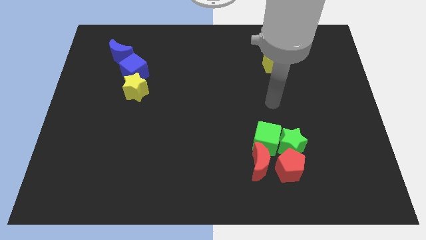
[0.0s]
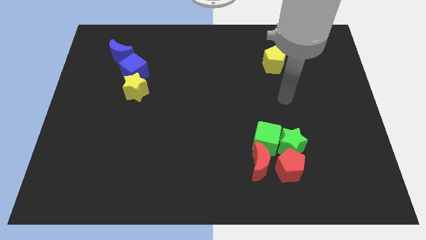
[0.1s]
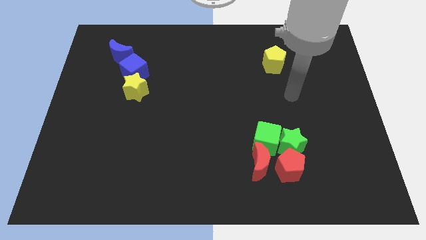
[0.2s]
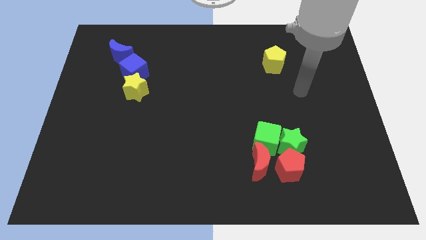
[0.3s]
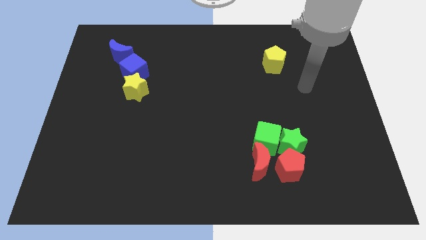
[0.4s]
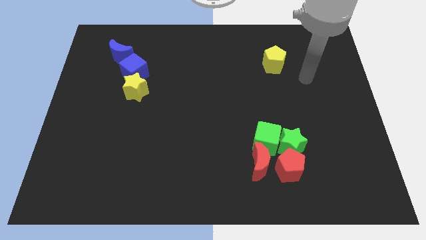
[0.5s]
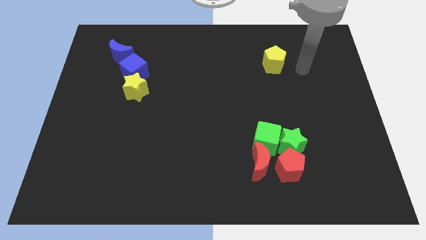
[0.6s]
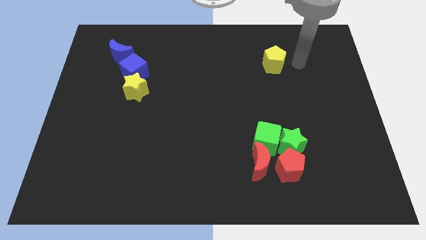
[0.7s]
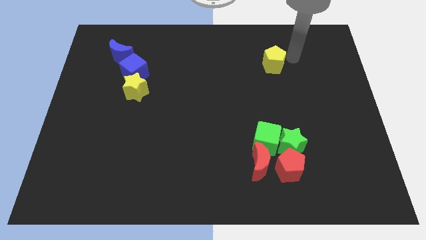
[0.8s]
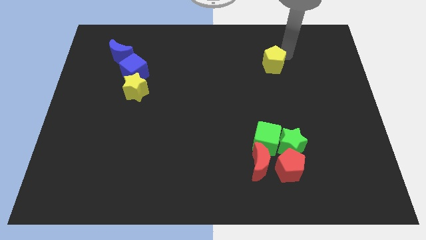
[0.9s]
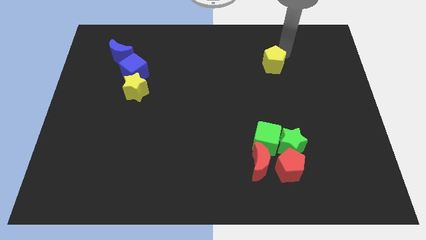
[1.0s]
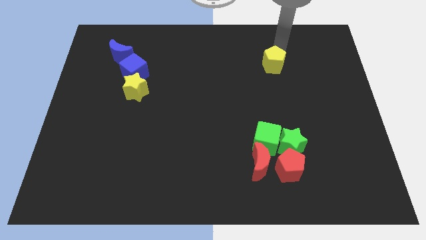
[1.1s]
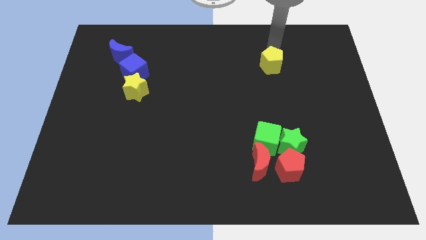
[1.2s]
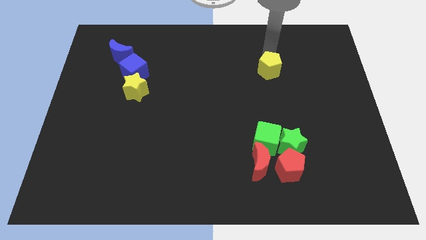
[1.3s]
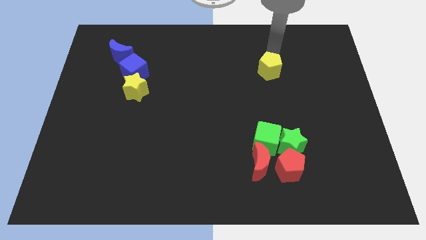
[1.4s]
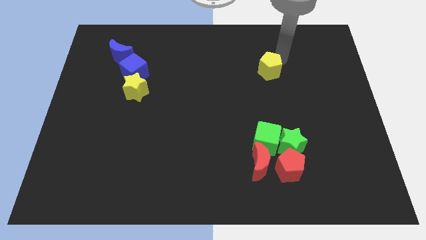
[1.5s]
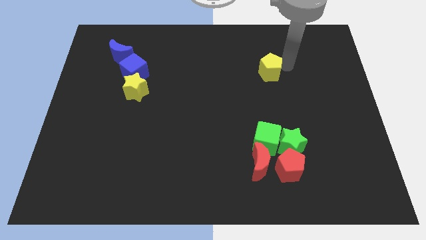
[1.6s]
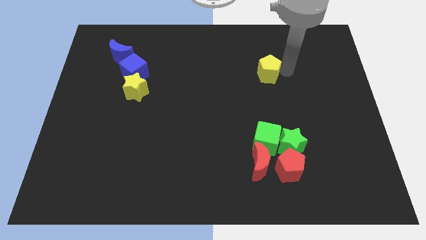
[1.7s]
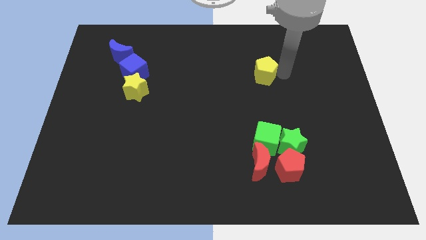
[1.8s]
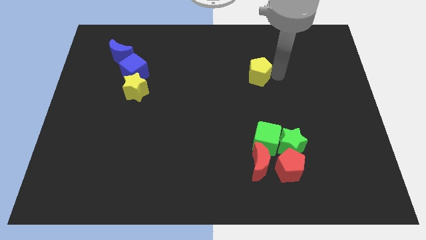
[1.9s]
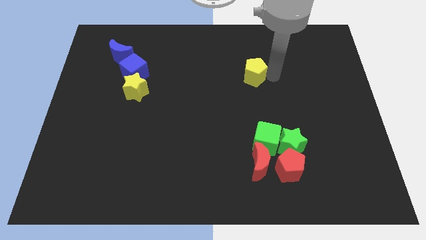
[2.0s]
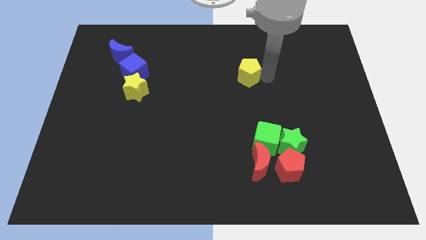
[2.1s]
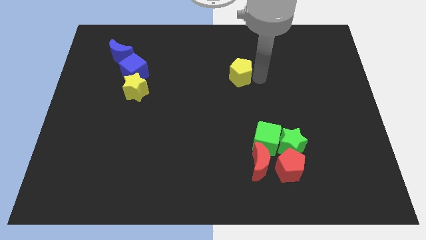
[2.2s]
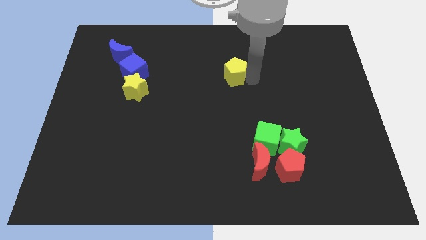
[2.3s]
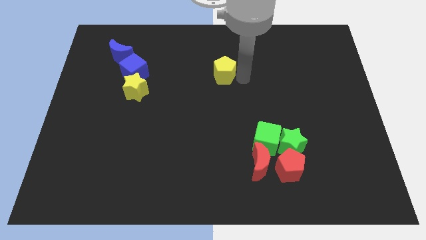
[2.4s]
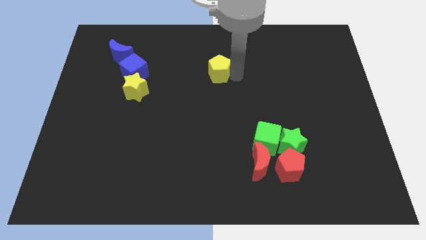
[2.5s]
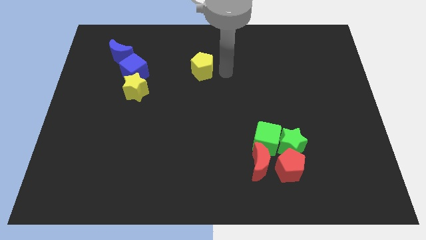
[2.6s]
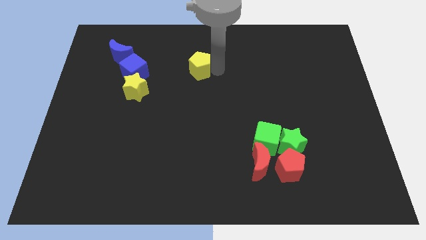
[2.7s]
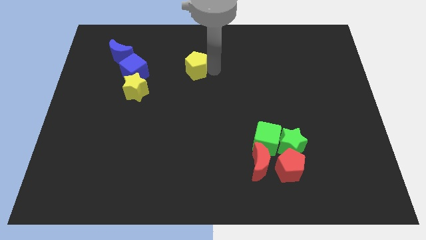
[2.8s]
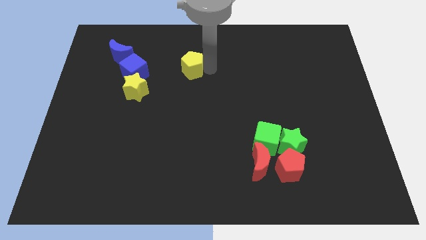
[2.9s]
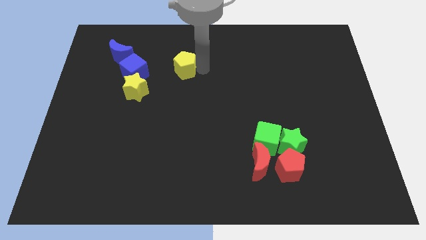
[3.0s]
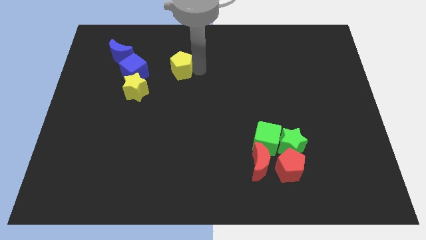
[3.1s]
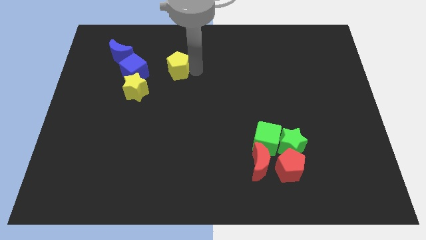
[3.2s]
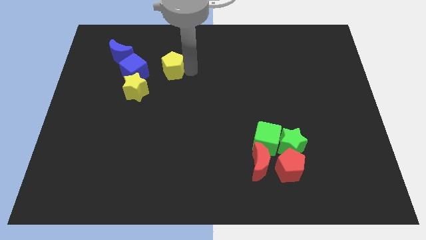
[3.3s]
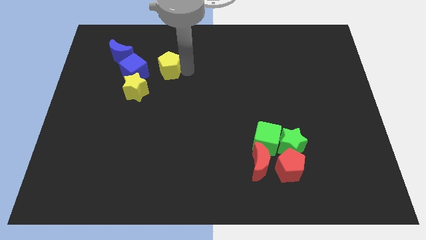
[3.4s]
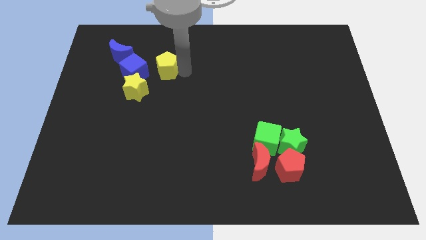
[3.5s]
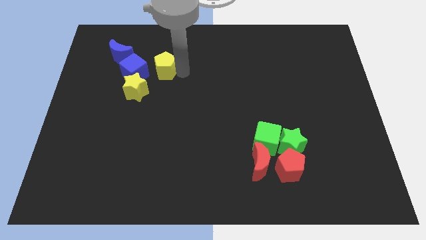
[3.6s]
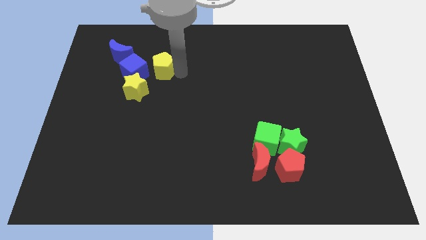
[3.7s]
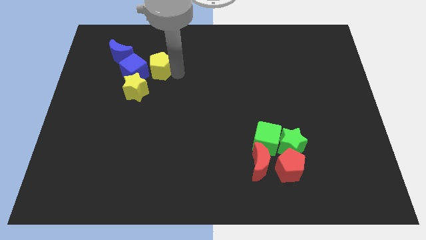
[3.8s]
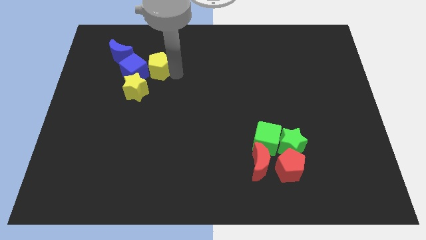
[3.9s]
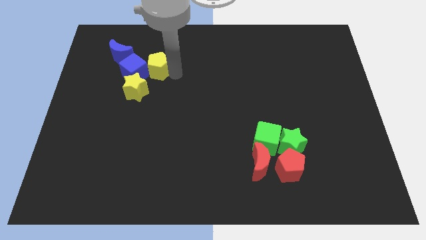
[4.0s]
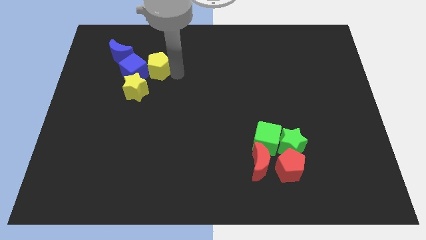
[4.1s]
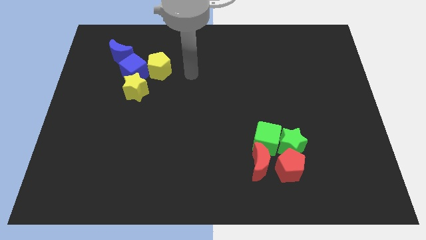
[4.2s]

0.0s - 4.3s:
push yellow pentagon into blue cube

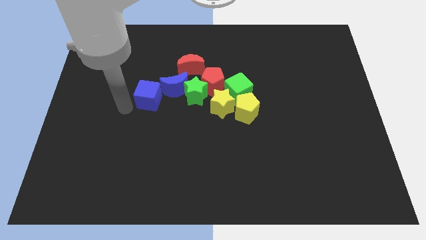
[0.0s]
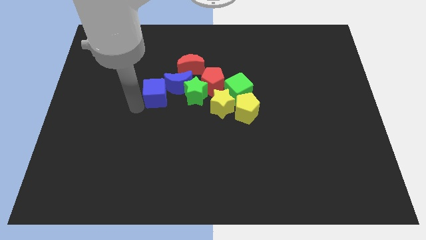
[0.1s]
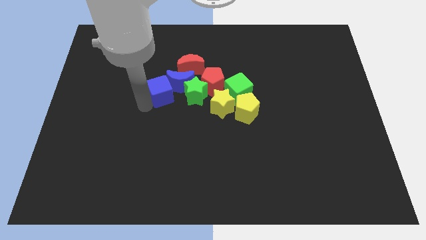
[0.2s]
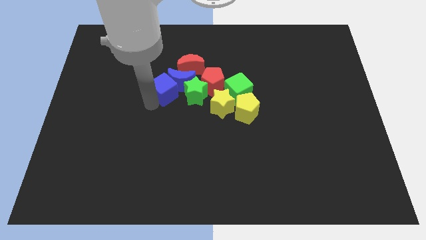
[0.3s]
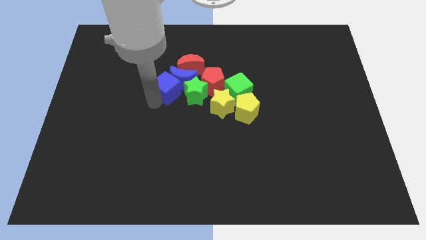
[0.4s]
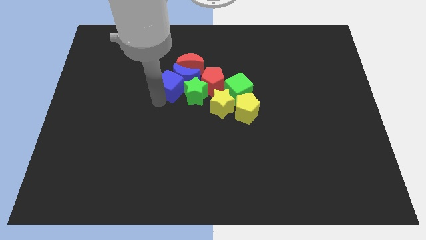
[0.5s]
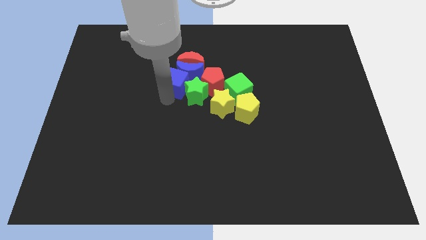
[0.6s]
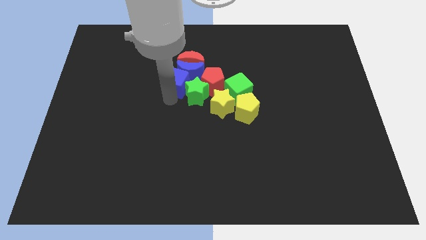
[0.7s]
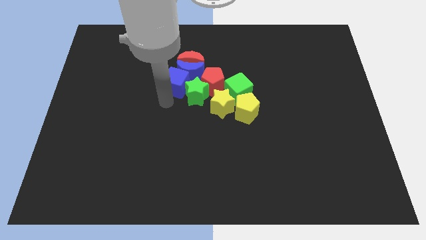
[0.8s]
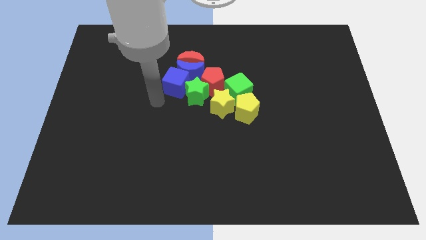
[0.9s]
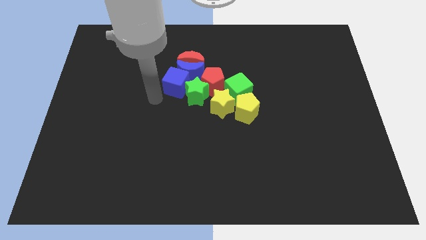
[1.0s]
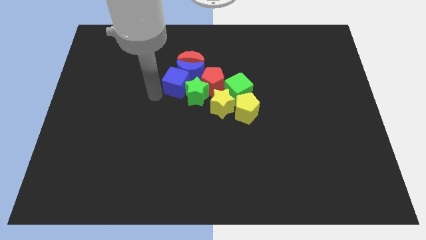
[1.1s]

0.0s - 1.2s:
move the blue cube along with the blue crescent close to the red crescent

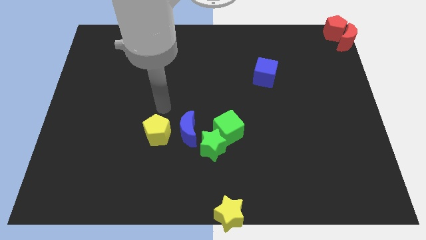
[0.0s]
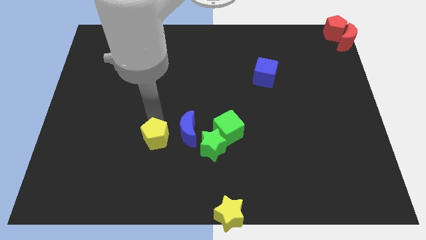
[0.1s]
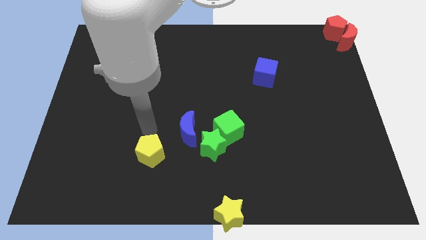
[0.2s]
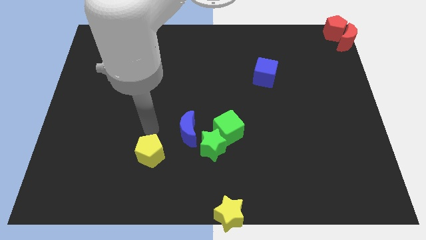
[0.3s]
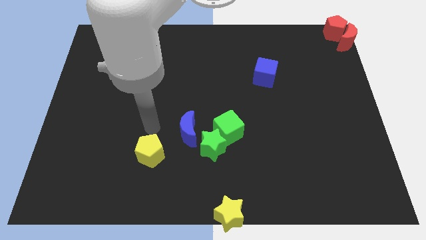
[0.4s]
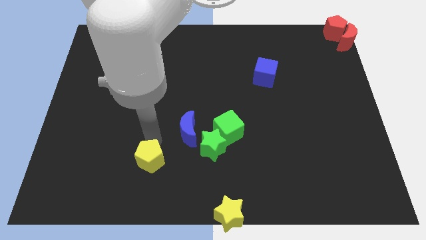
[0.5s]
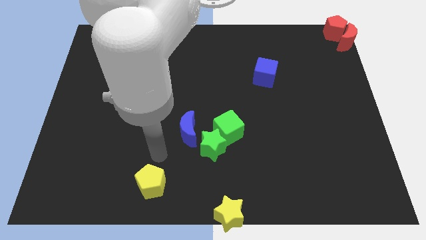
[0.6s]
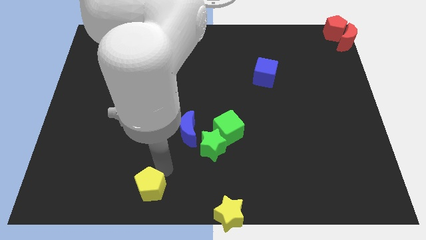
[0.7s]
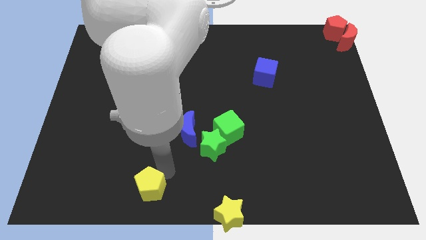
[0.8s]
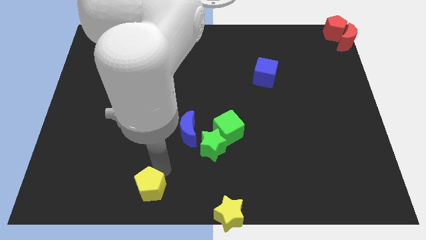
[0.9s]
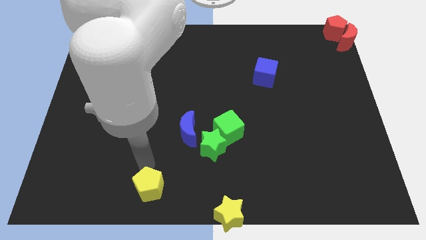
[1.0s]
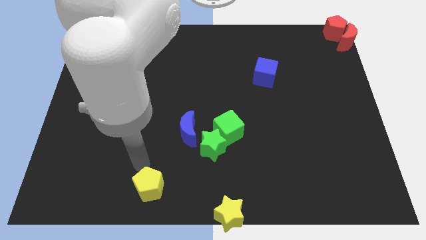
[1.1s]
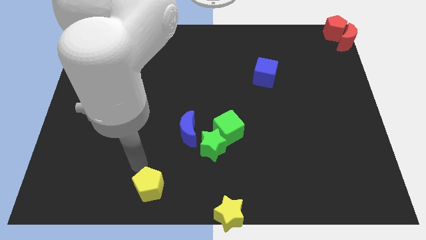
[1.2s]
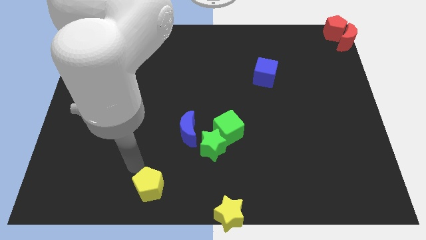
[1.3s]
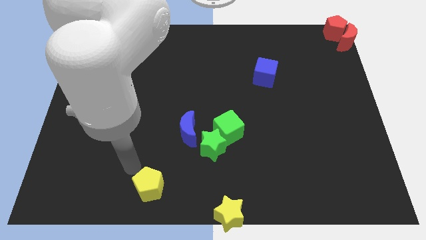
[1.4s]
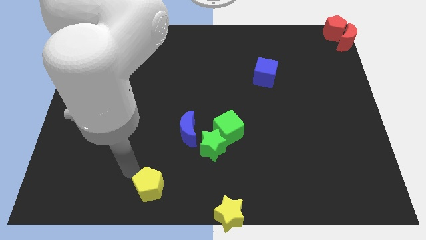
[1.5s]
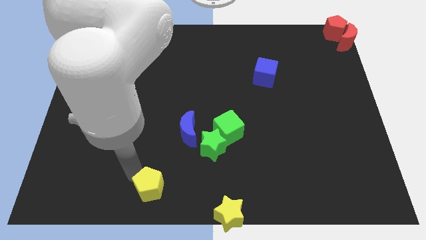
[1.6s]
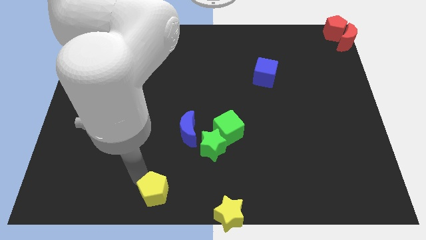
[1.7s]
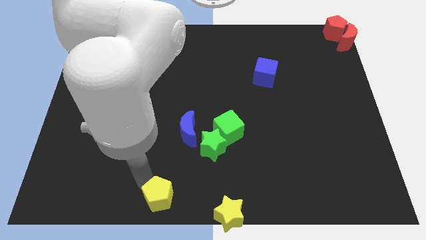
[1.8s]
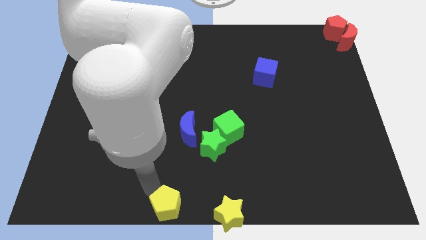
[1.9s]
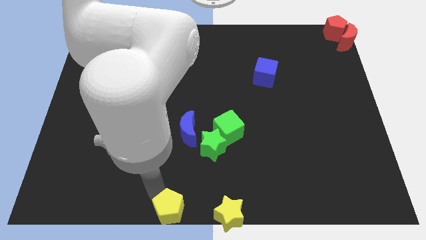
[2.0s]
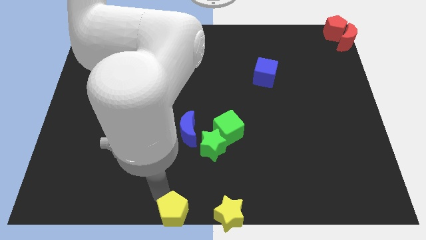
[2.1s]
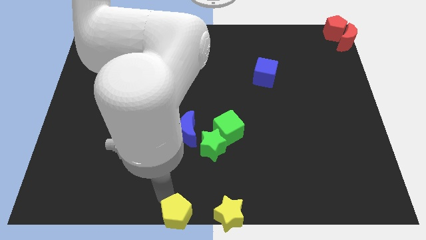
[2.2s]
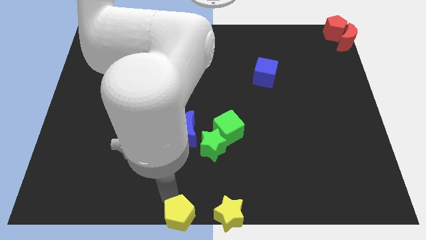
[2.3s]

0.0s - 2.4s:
drag the yellow pentagon towards the bottom center of the board

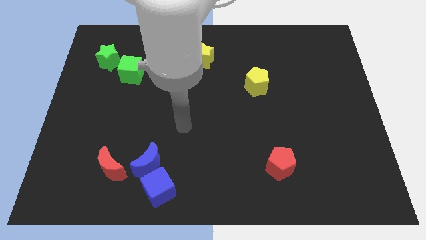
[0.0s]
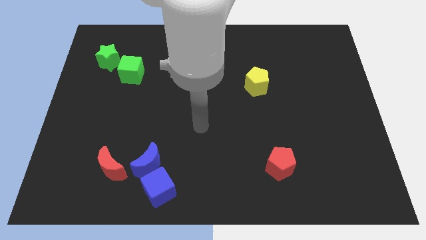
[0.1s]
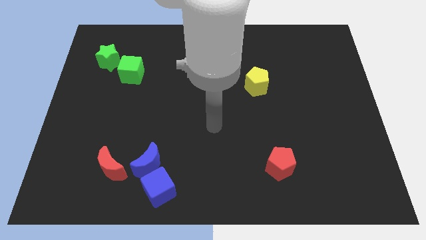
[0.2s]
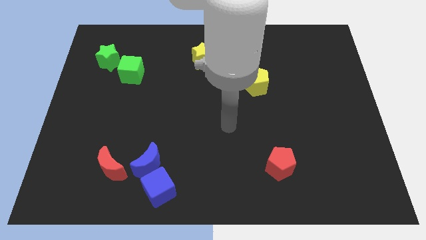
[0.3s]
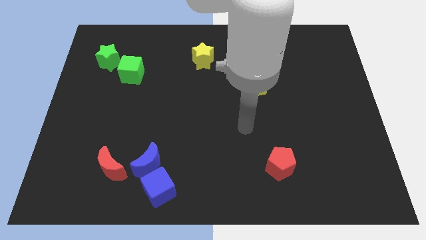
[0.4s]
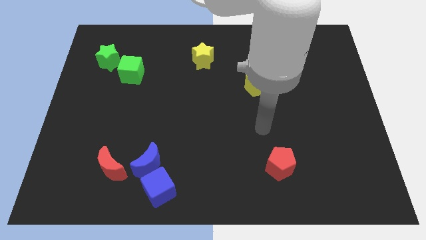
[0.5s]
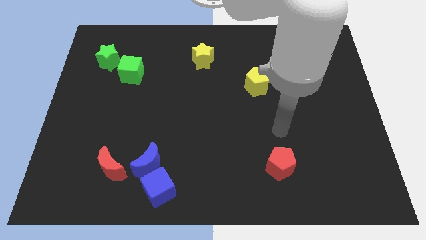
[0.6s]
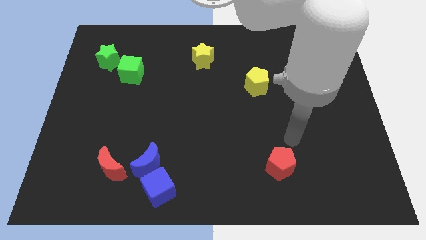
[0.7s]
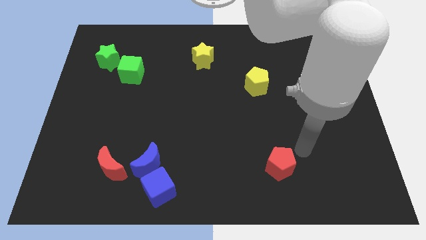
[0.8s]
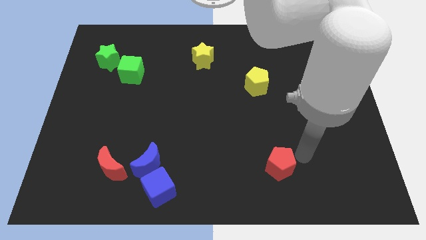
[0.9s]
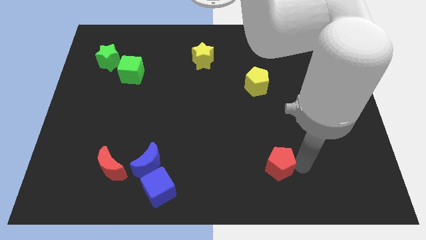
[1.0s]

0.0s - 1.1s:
point your arm at the right of the red pentagon
